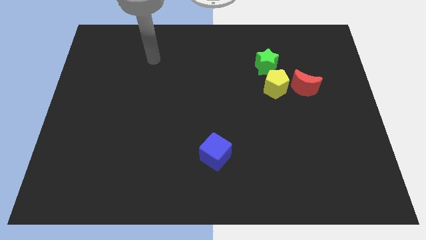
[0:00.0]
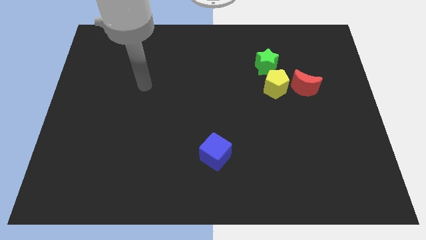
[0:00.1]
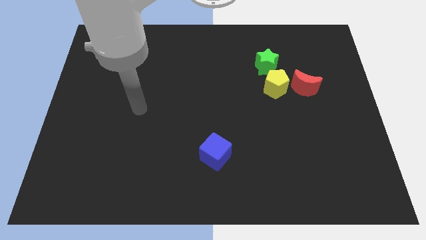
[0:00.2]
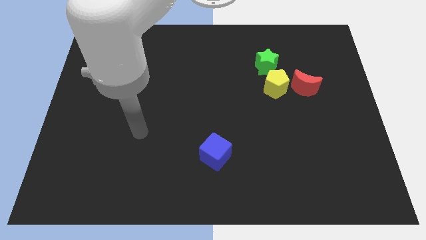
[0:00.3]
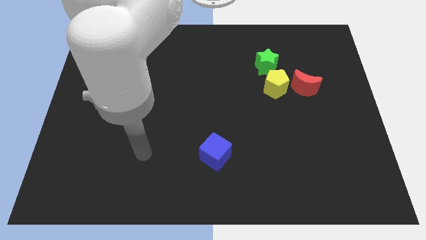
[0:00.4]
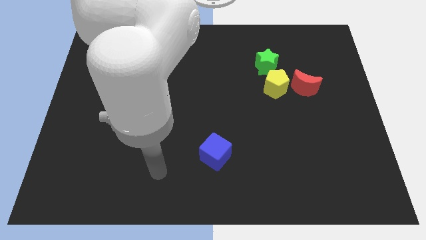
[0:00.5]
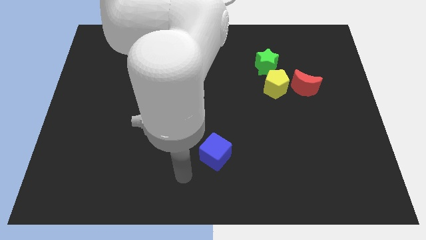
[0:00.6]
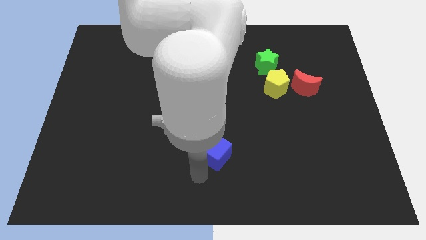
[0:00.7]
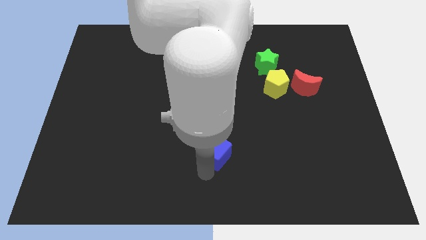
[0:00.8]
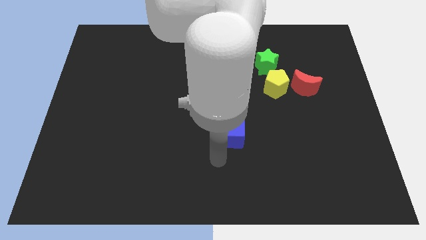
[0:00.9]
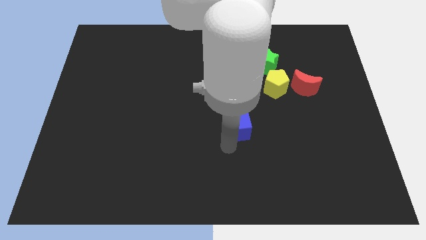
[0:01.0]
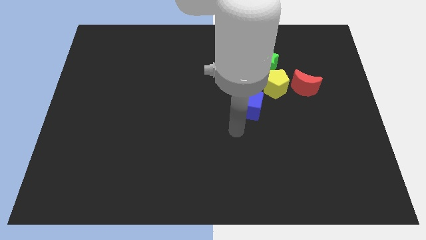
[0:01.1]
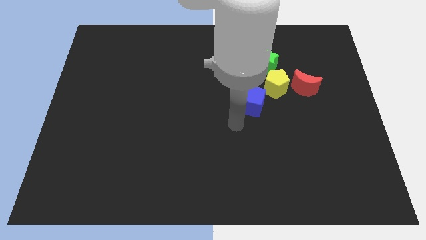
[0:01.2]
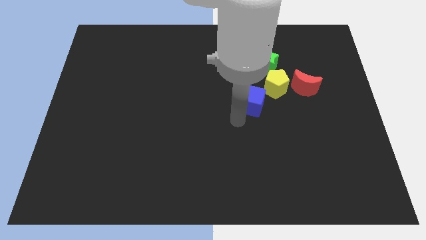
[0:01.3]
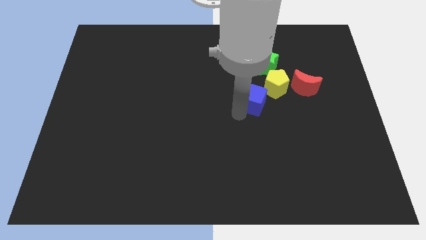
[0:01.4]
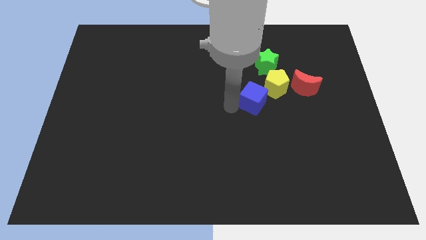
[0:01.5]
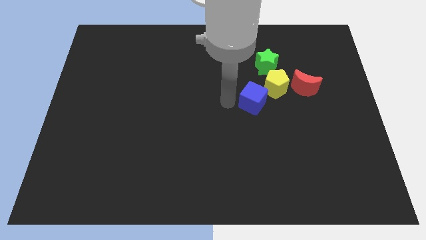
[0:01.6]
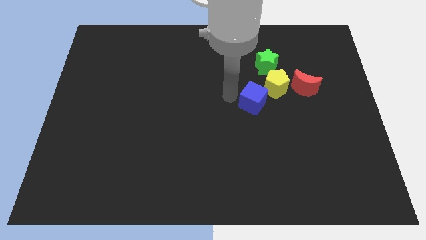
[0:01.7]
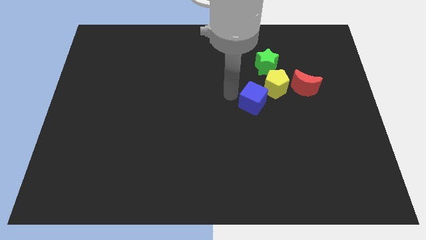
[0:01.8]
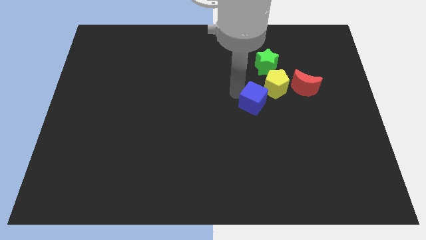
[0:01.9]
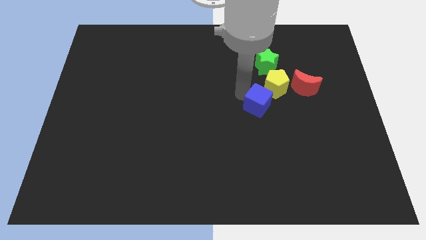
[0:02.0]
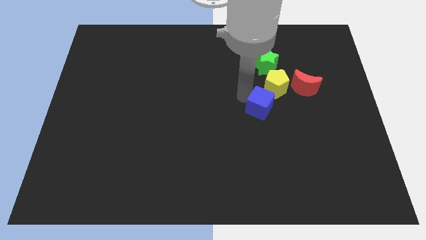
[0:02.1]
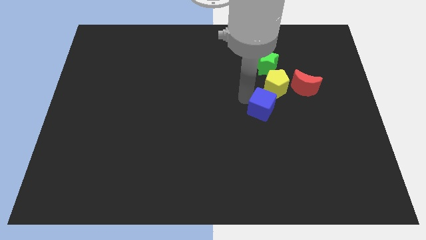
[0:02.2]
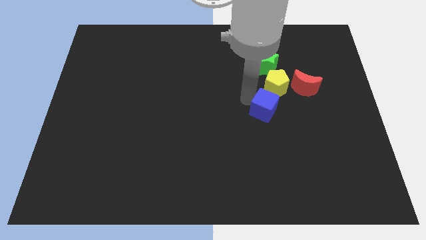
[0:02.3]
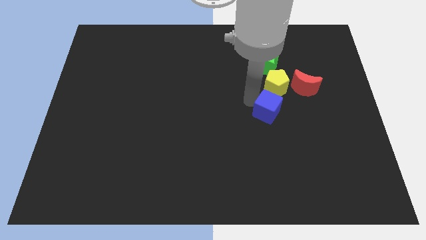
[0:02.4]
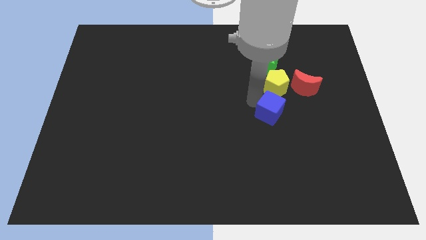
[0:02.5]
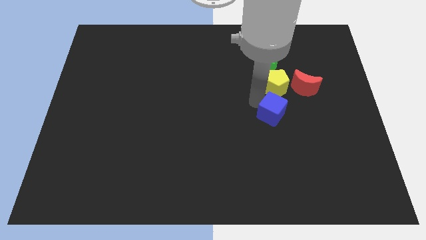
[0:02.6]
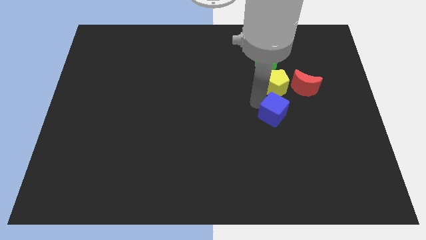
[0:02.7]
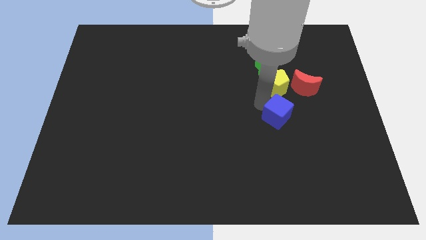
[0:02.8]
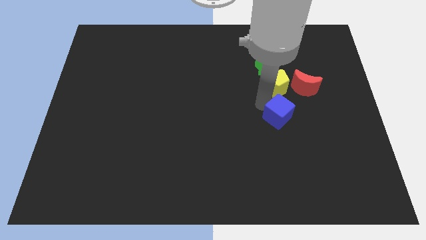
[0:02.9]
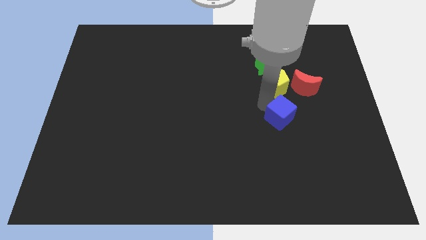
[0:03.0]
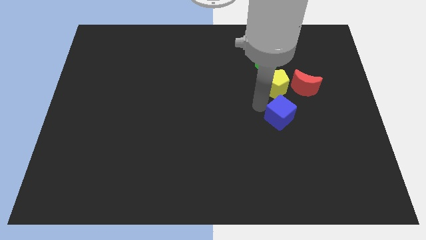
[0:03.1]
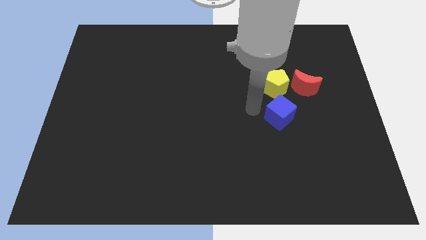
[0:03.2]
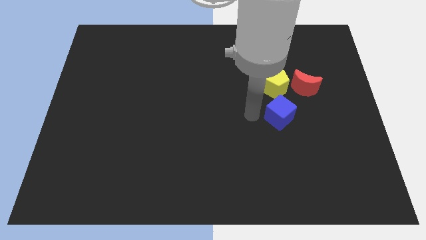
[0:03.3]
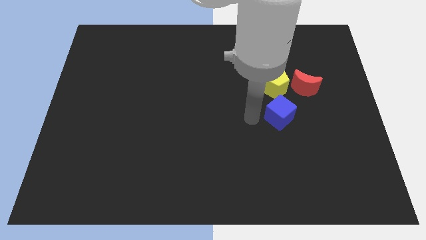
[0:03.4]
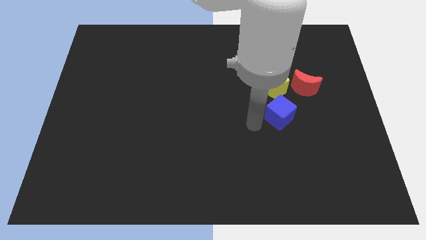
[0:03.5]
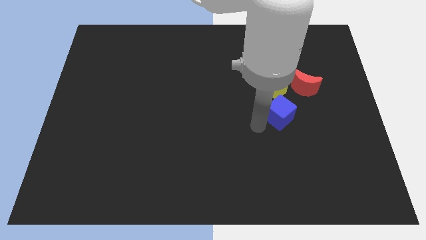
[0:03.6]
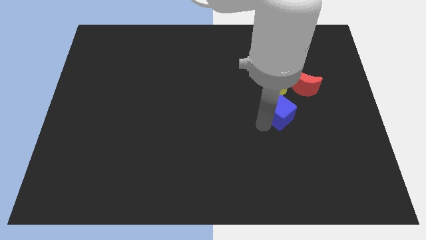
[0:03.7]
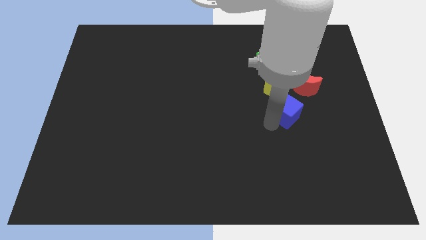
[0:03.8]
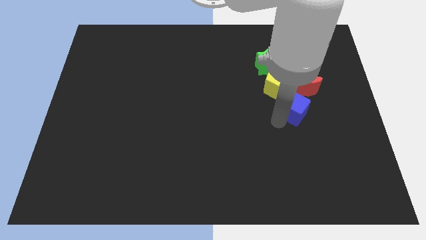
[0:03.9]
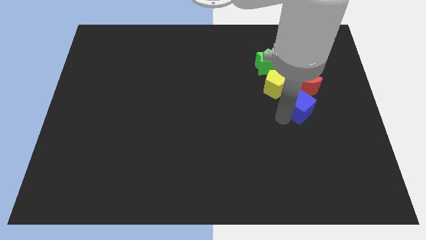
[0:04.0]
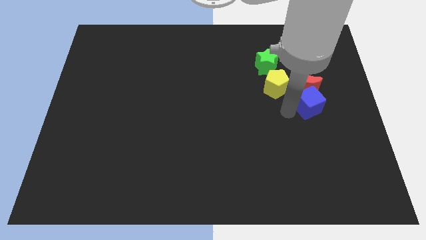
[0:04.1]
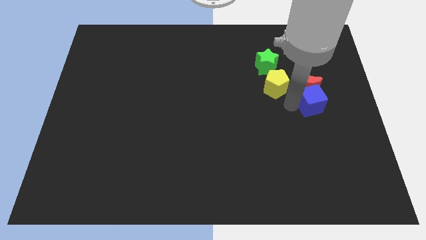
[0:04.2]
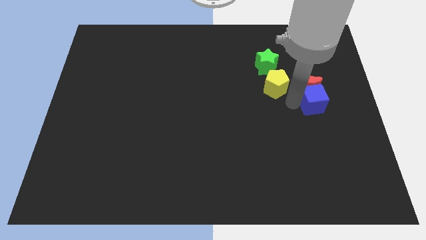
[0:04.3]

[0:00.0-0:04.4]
slide the blue cube to the red moon

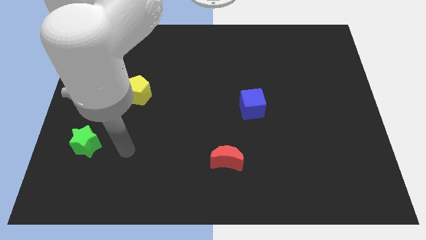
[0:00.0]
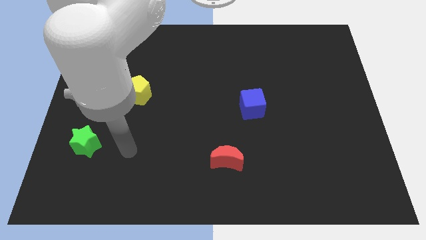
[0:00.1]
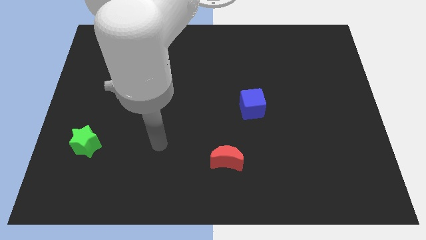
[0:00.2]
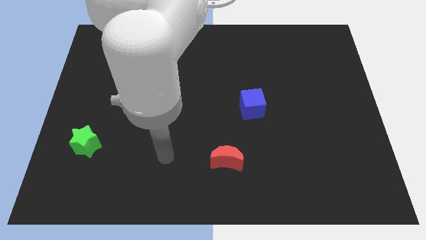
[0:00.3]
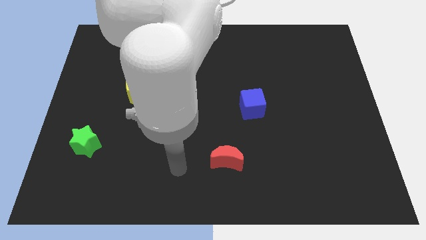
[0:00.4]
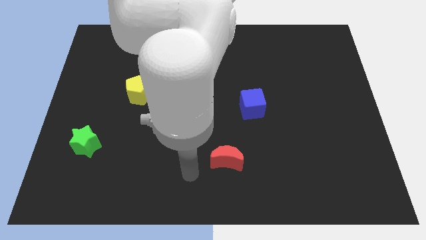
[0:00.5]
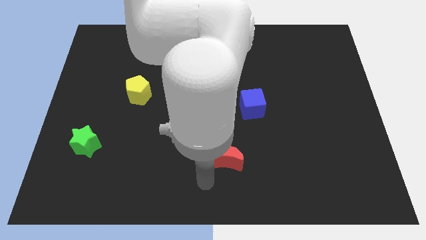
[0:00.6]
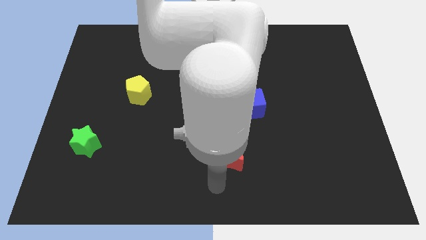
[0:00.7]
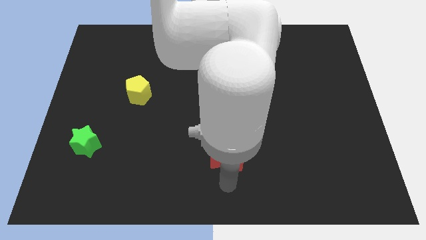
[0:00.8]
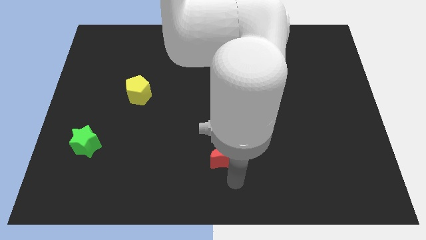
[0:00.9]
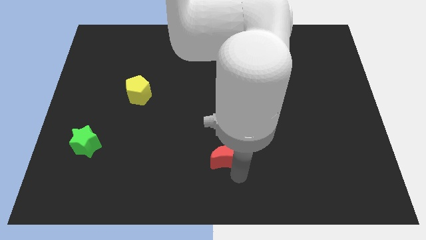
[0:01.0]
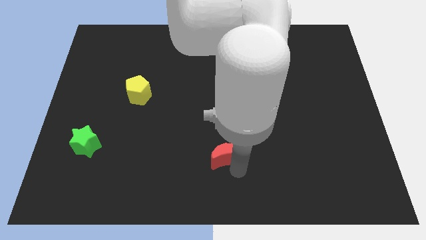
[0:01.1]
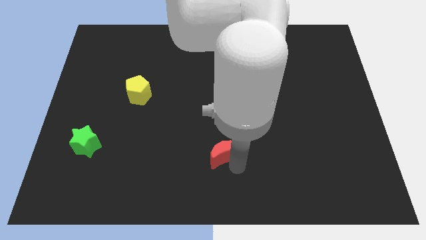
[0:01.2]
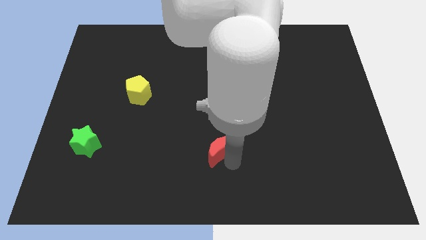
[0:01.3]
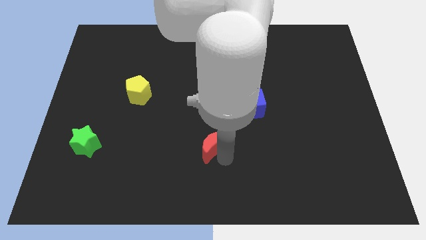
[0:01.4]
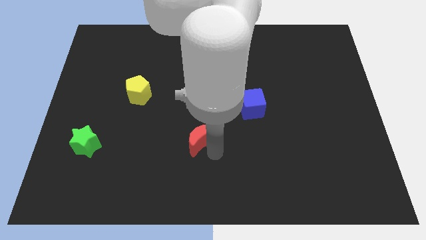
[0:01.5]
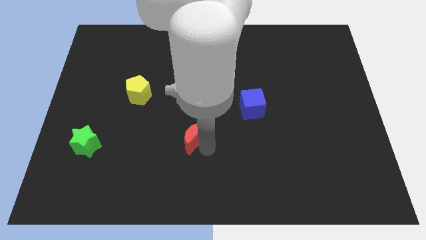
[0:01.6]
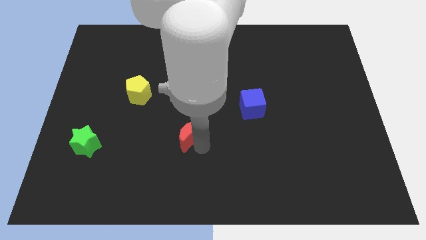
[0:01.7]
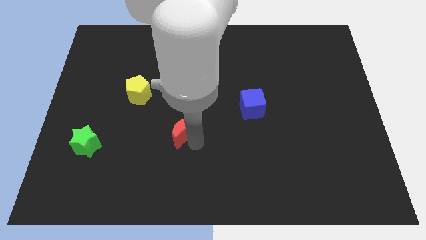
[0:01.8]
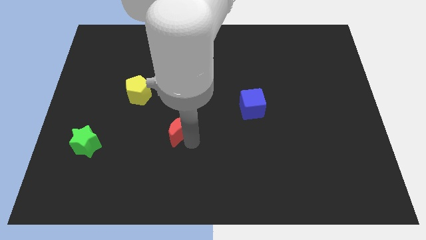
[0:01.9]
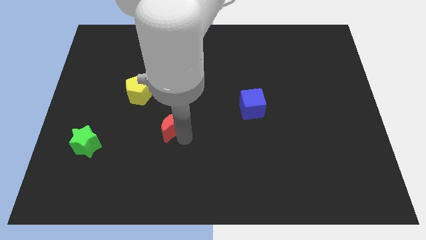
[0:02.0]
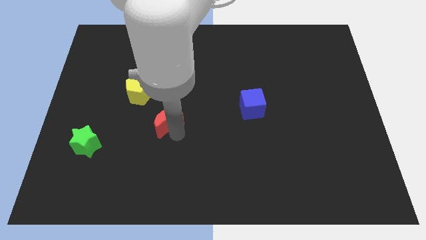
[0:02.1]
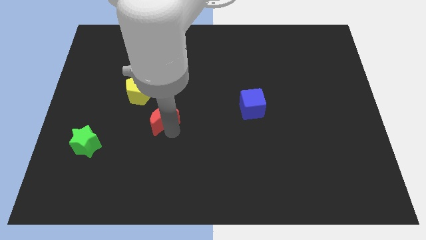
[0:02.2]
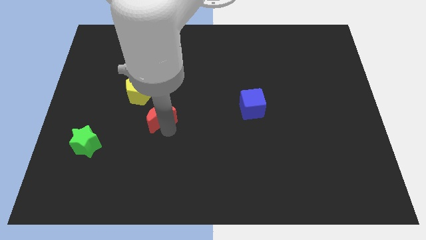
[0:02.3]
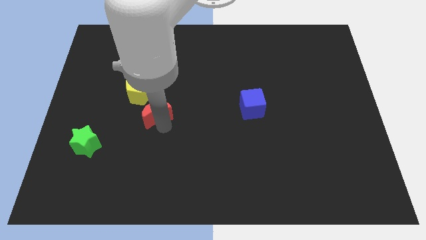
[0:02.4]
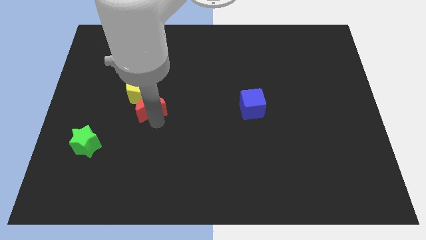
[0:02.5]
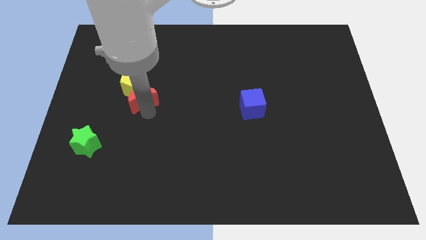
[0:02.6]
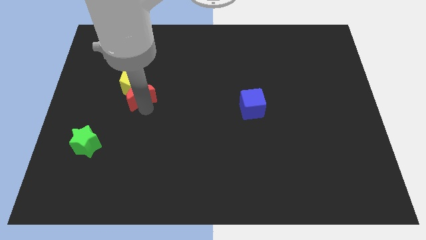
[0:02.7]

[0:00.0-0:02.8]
slide the red moon close to the pentagon

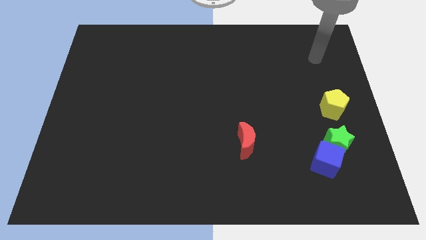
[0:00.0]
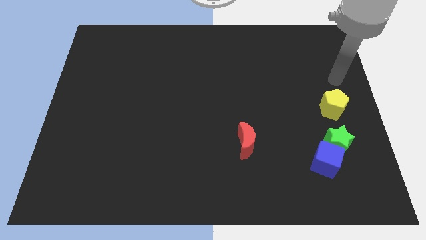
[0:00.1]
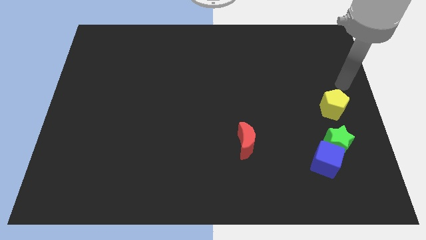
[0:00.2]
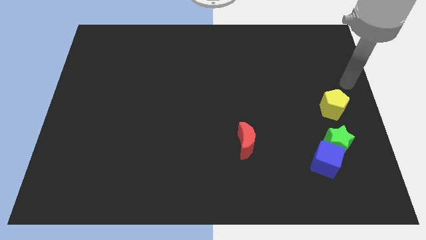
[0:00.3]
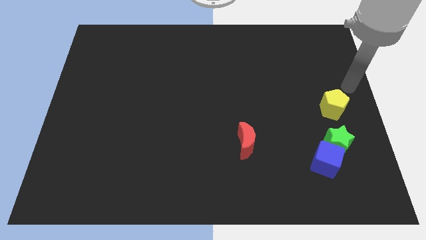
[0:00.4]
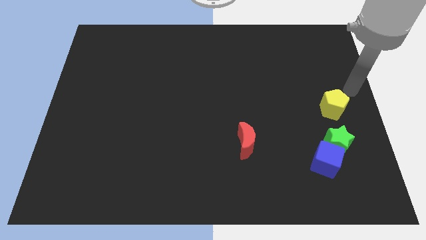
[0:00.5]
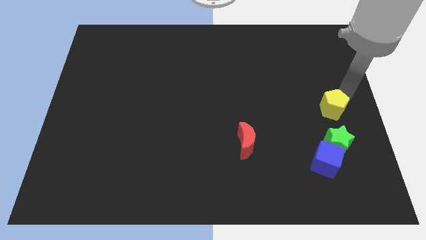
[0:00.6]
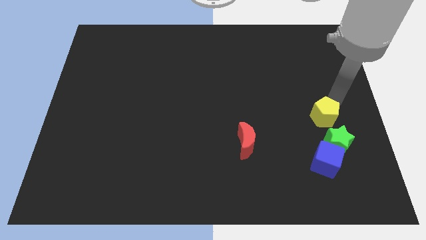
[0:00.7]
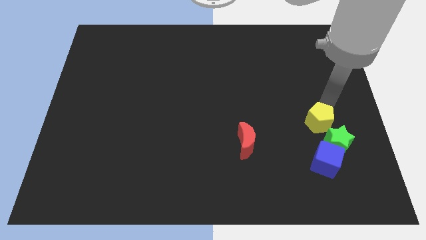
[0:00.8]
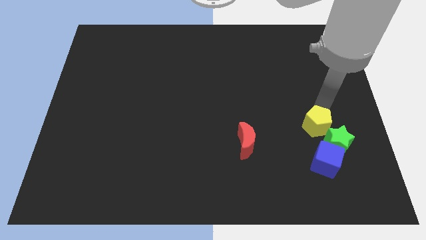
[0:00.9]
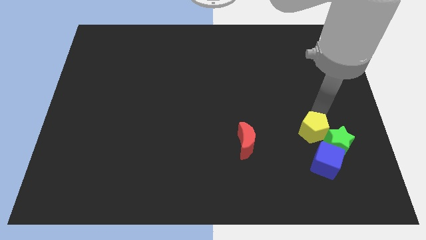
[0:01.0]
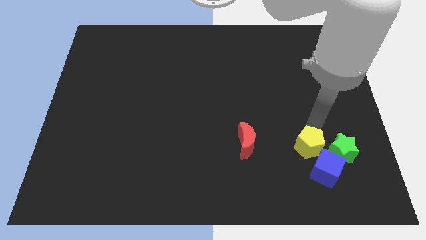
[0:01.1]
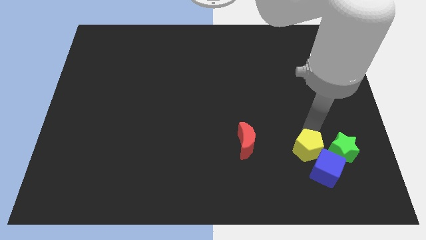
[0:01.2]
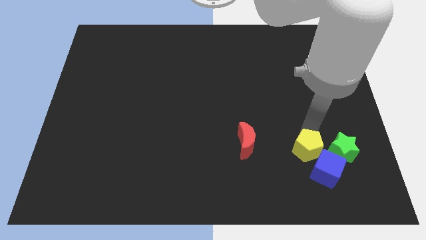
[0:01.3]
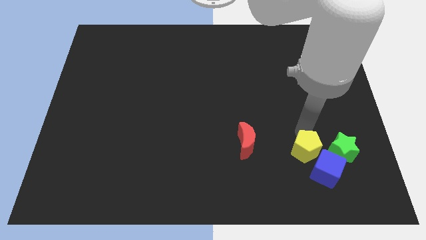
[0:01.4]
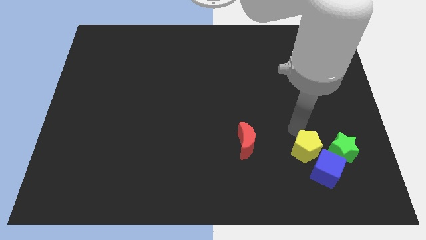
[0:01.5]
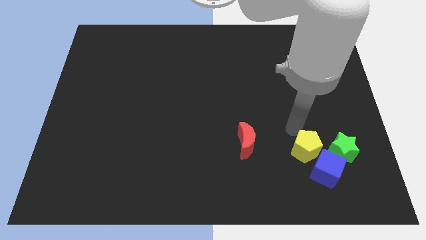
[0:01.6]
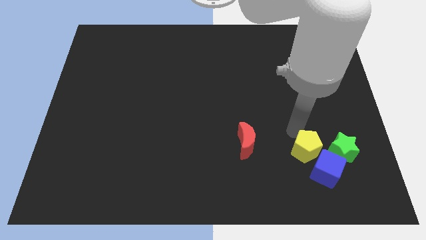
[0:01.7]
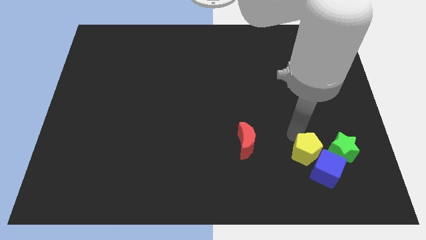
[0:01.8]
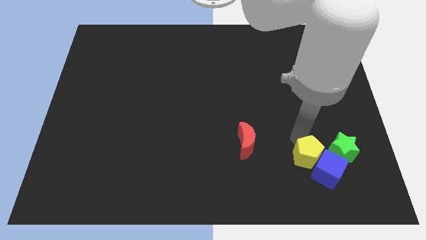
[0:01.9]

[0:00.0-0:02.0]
move the yellow block to the cube
